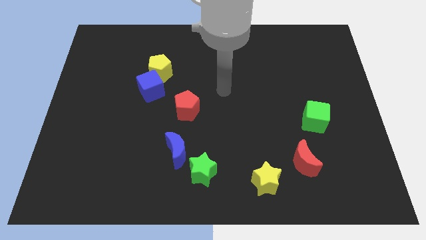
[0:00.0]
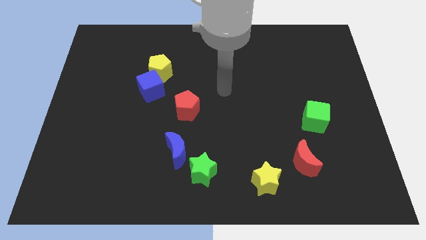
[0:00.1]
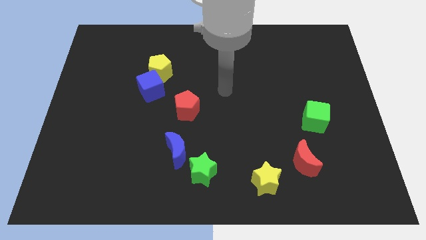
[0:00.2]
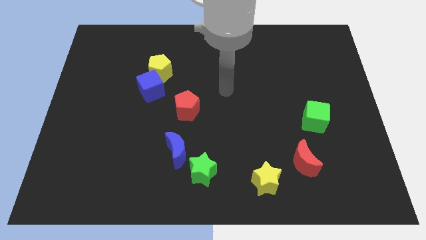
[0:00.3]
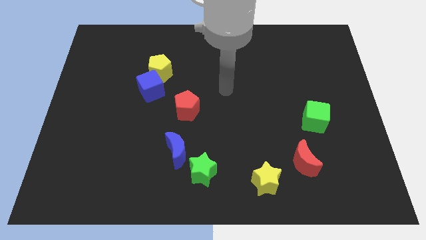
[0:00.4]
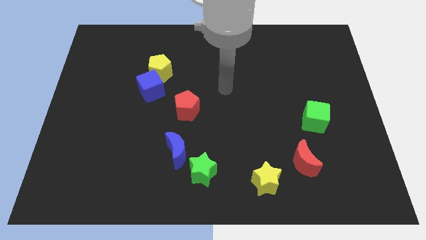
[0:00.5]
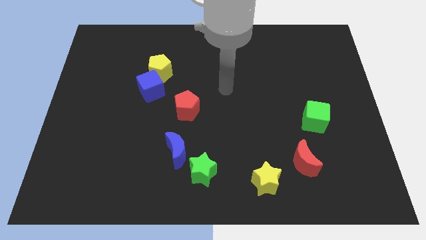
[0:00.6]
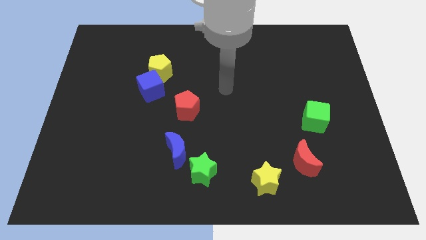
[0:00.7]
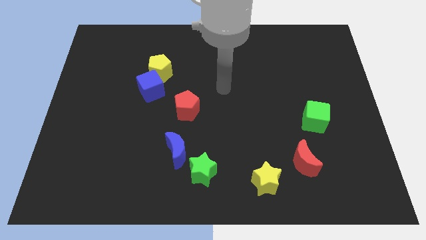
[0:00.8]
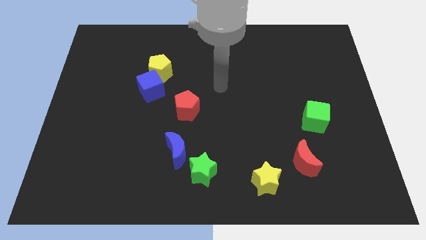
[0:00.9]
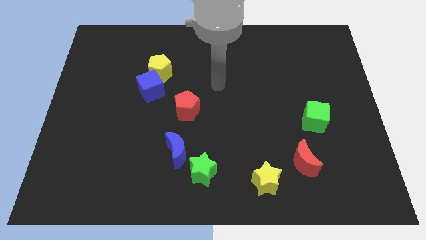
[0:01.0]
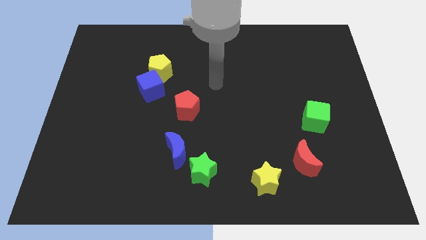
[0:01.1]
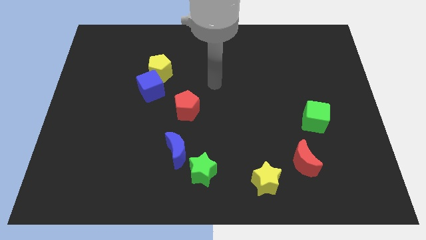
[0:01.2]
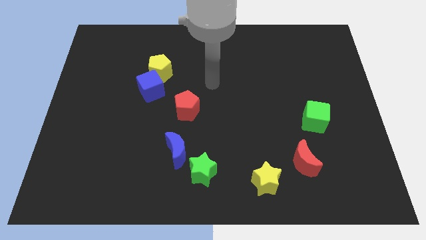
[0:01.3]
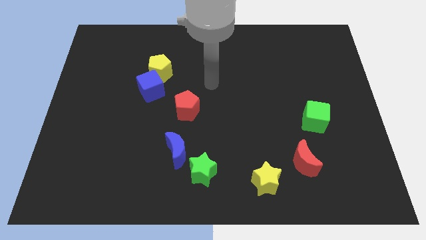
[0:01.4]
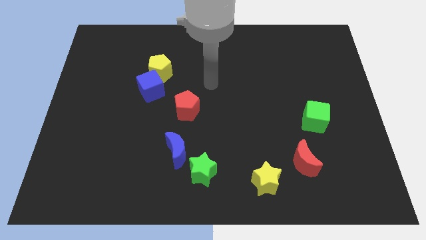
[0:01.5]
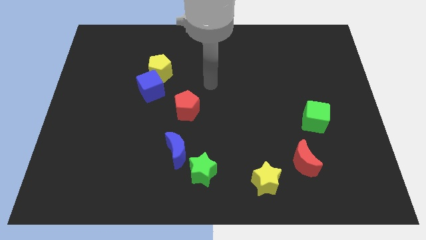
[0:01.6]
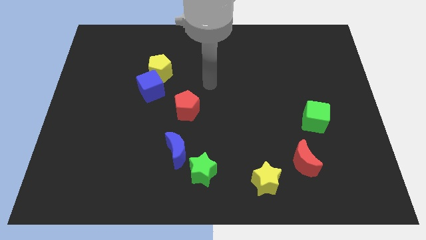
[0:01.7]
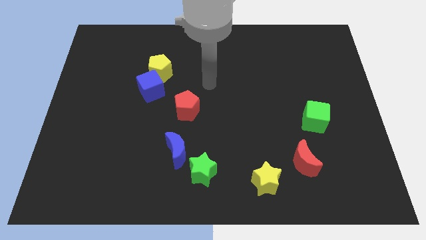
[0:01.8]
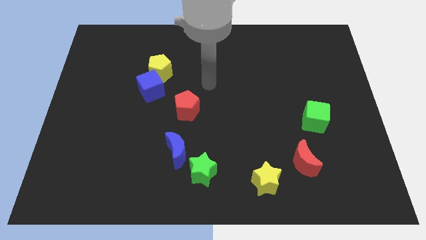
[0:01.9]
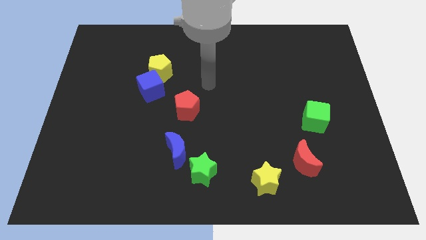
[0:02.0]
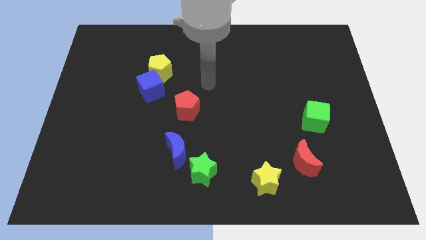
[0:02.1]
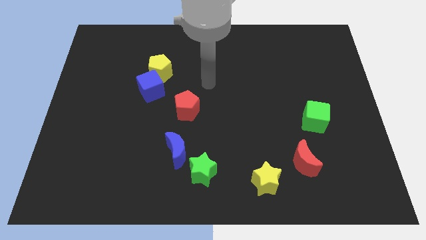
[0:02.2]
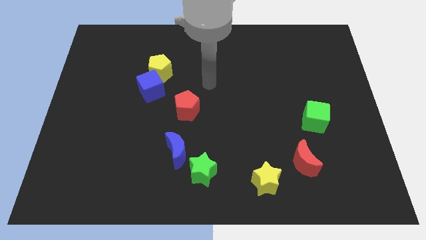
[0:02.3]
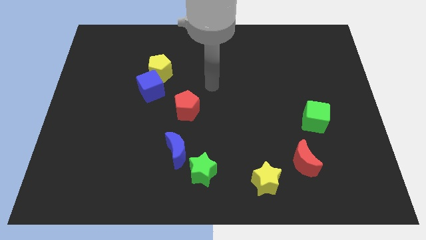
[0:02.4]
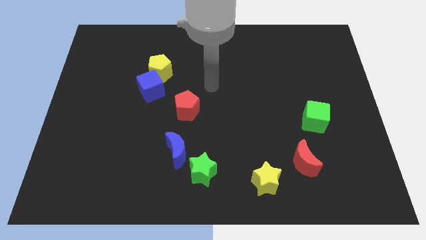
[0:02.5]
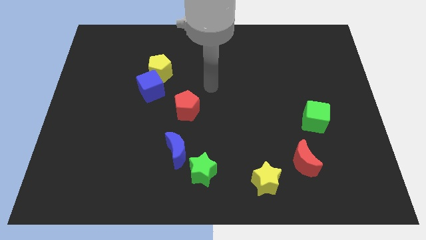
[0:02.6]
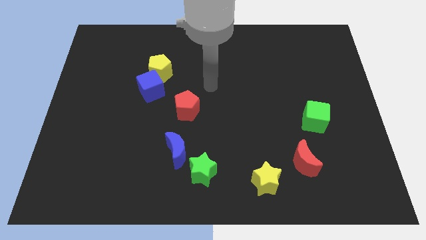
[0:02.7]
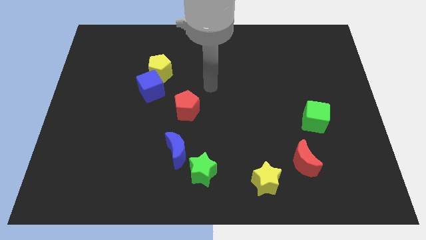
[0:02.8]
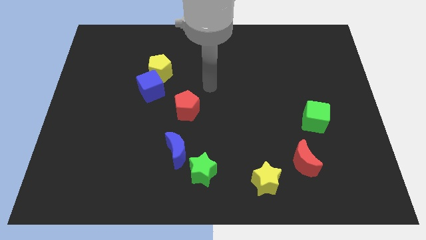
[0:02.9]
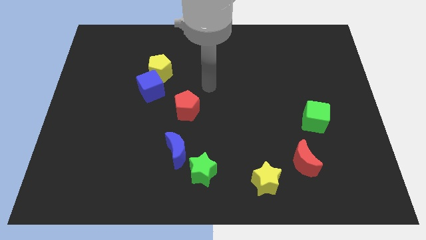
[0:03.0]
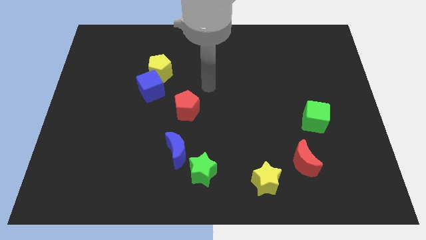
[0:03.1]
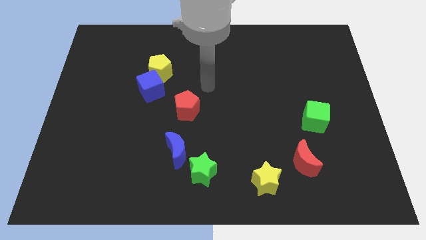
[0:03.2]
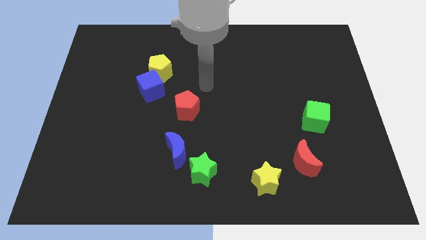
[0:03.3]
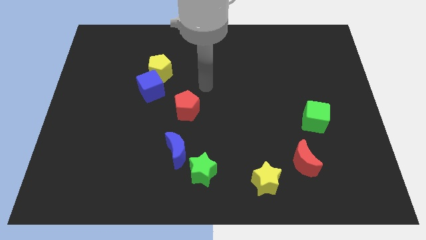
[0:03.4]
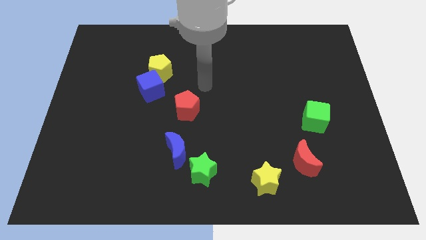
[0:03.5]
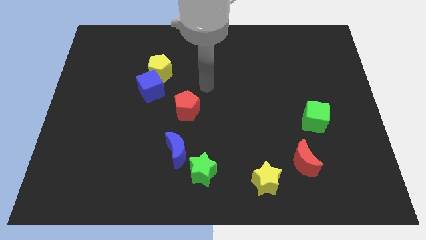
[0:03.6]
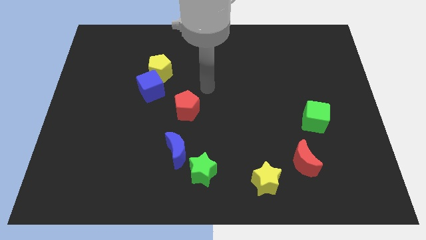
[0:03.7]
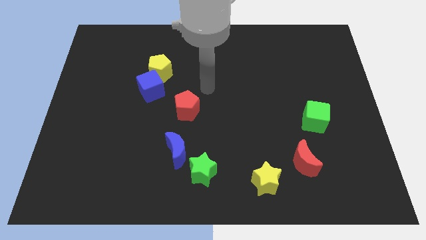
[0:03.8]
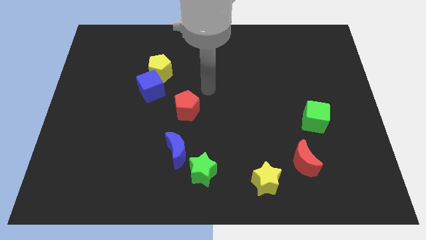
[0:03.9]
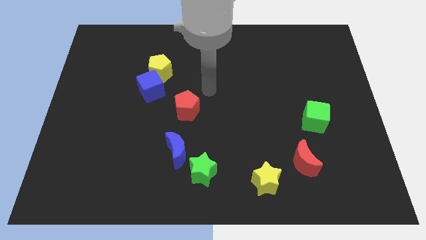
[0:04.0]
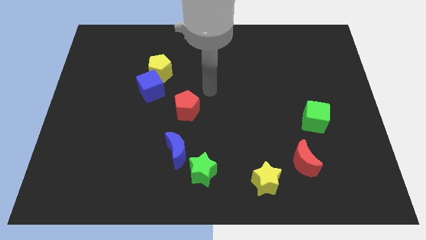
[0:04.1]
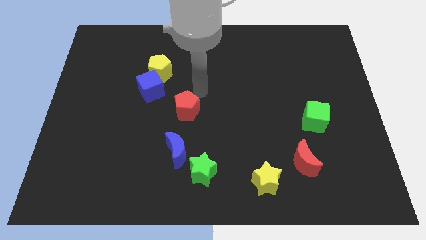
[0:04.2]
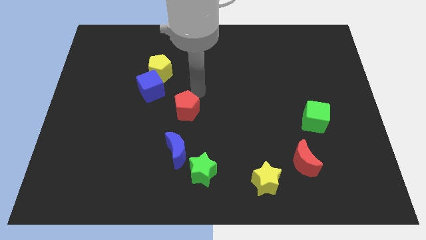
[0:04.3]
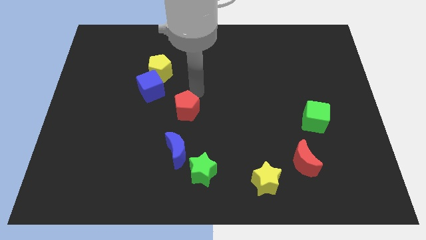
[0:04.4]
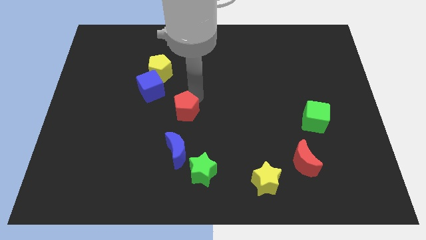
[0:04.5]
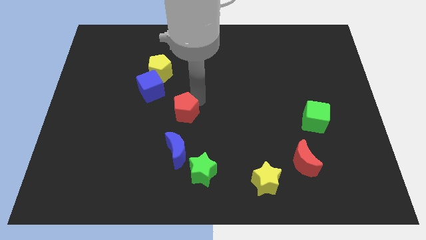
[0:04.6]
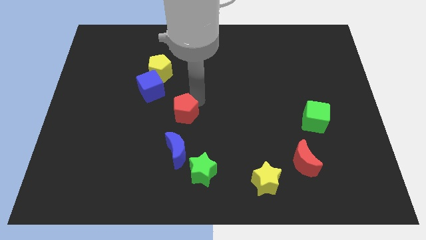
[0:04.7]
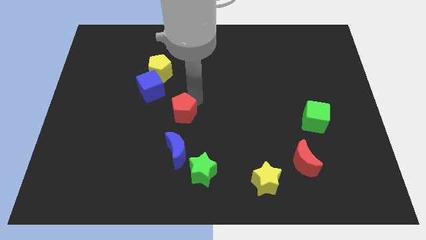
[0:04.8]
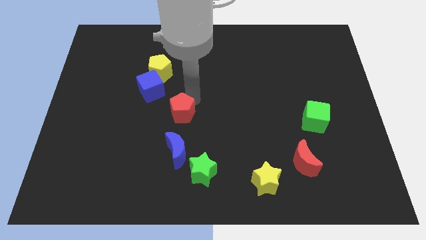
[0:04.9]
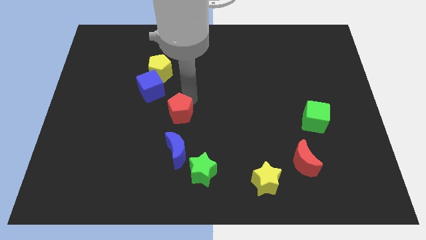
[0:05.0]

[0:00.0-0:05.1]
move the red pentagon slightly

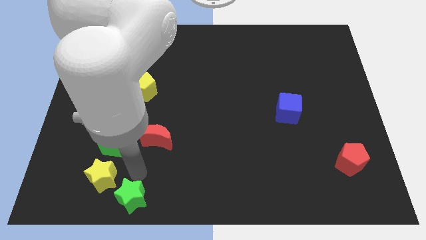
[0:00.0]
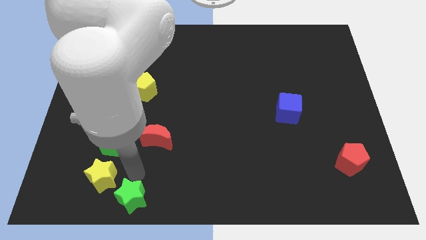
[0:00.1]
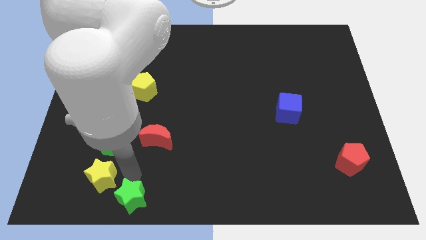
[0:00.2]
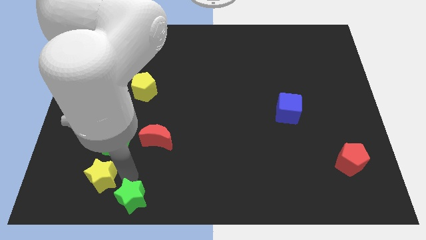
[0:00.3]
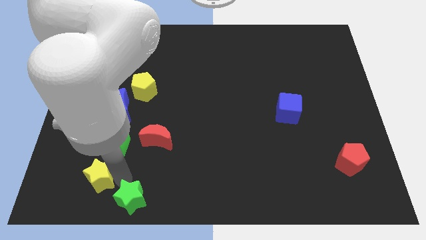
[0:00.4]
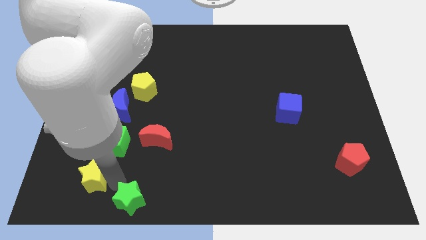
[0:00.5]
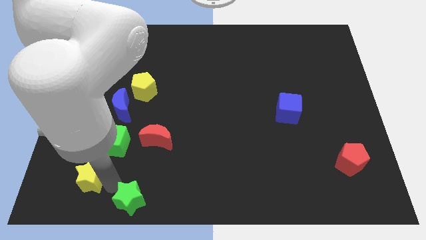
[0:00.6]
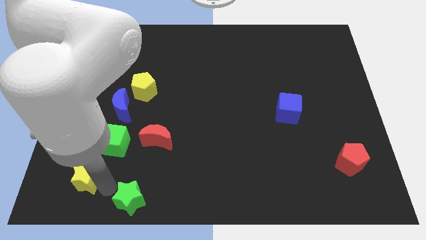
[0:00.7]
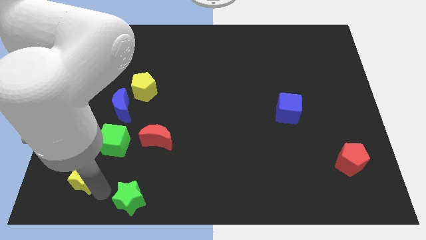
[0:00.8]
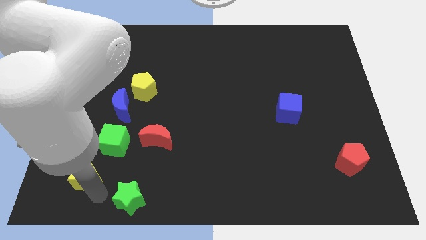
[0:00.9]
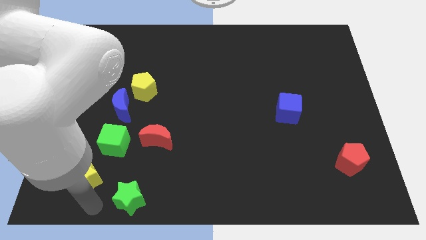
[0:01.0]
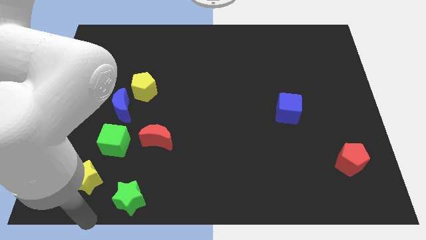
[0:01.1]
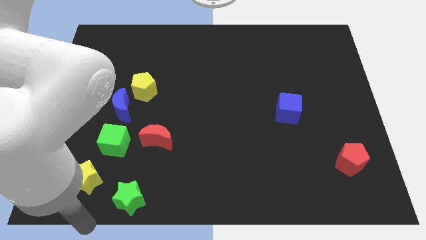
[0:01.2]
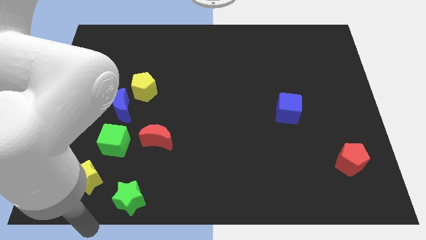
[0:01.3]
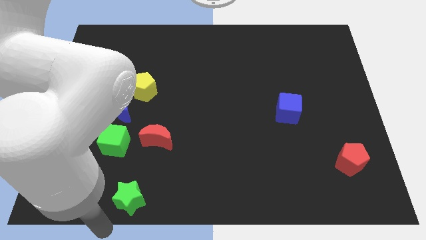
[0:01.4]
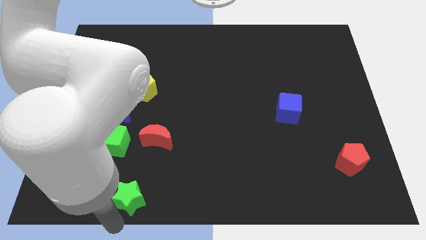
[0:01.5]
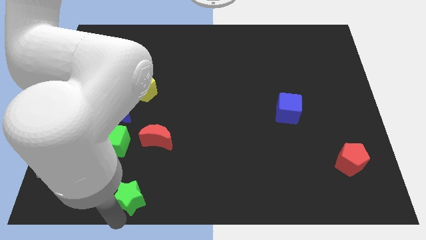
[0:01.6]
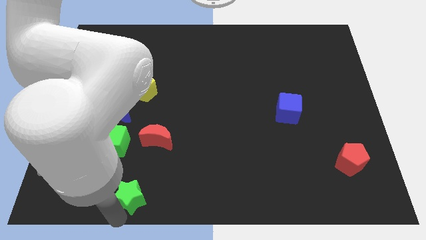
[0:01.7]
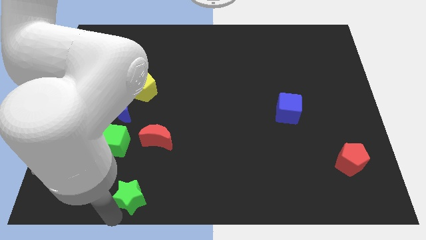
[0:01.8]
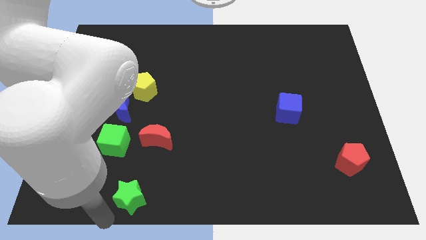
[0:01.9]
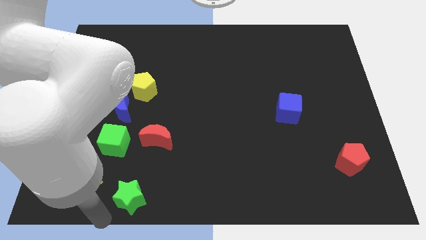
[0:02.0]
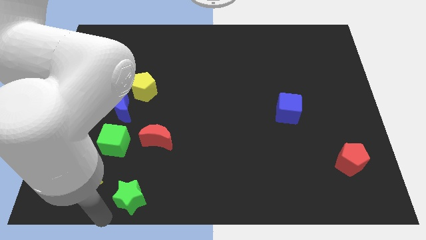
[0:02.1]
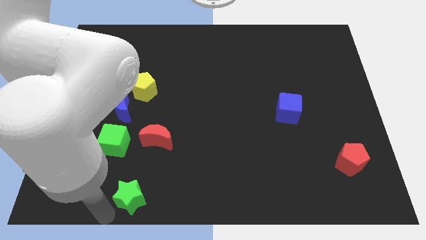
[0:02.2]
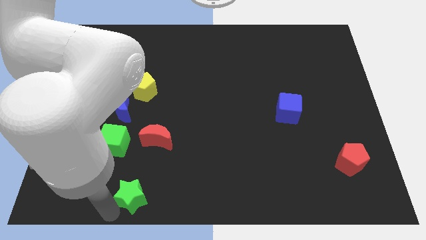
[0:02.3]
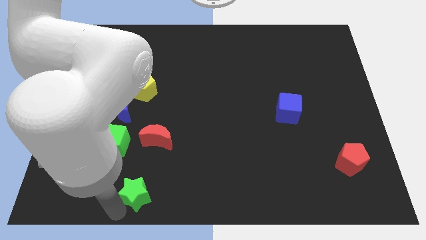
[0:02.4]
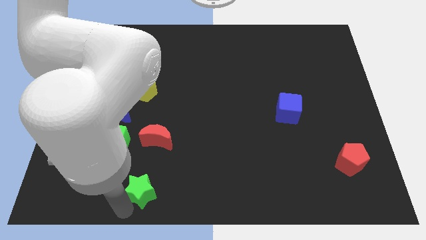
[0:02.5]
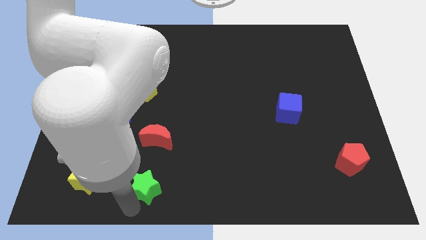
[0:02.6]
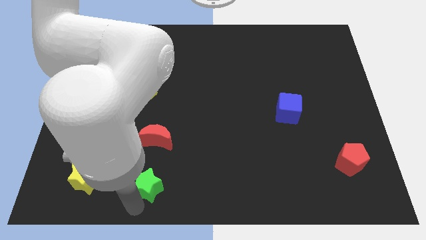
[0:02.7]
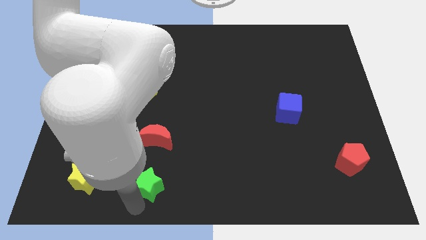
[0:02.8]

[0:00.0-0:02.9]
separate the green and yellow stars

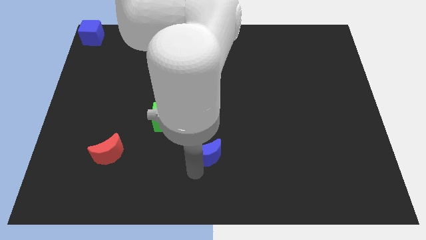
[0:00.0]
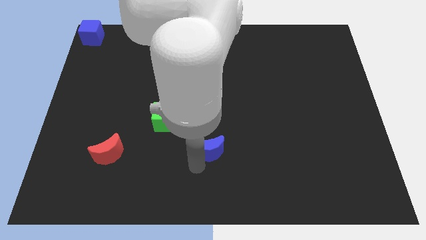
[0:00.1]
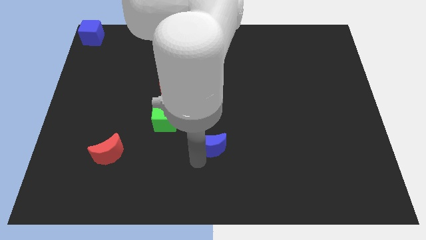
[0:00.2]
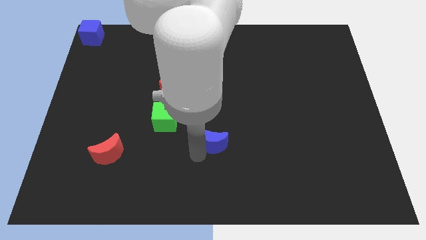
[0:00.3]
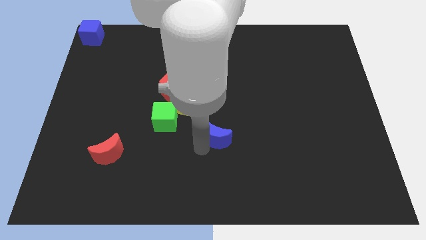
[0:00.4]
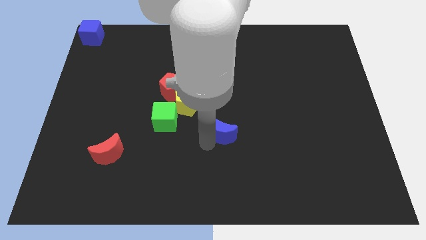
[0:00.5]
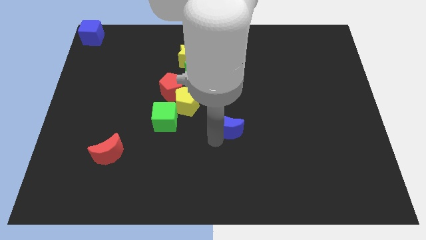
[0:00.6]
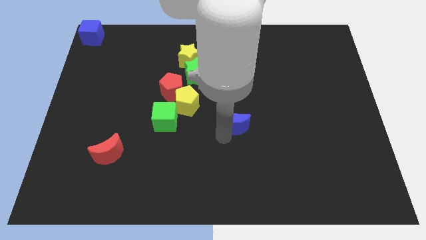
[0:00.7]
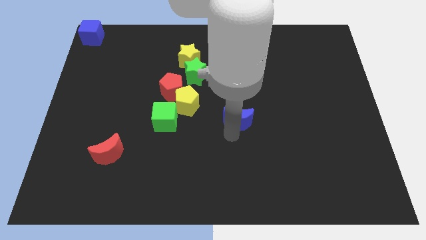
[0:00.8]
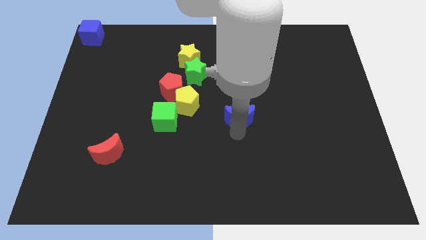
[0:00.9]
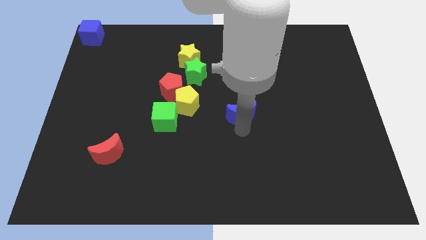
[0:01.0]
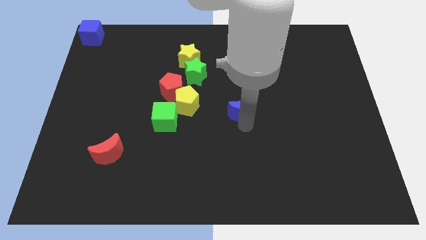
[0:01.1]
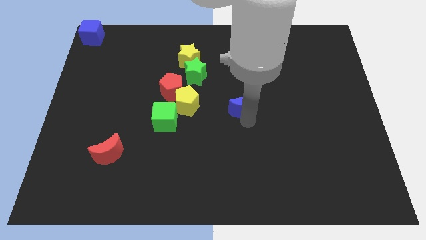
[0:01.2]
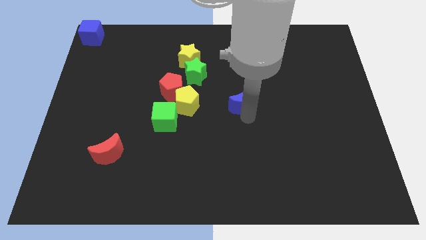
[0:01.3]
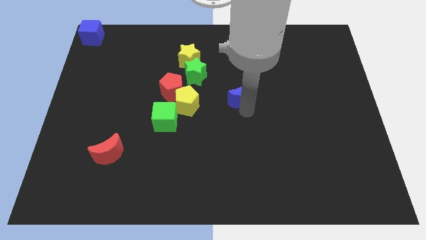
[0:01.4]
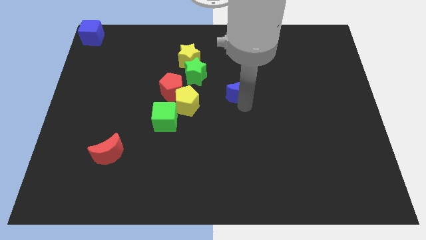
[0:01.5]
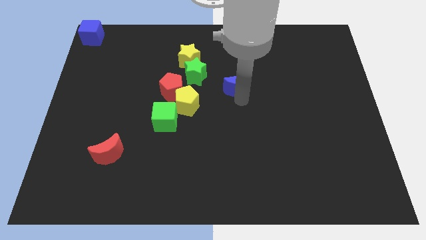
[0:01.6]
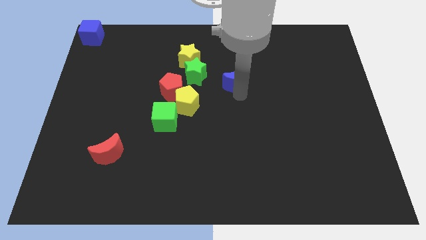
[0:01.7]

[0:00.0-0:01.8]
place the blue moon towards the center of the board
